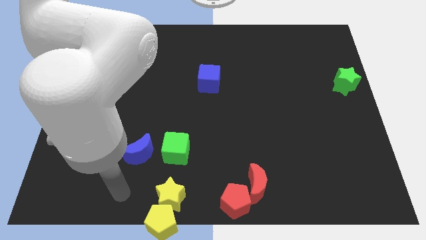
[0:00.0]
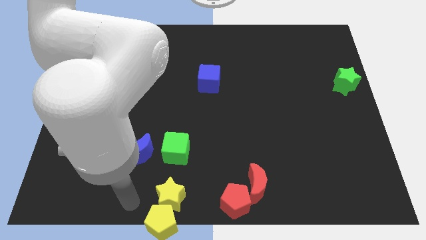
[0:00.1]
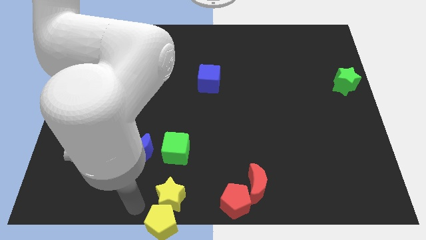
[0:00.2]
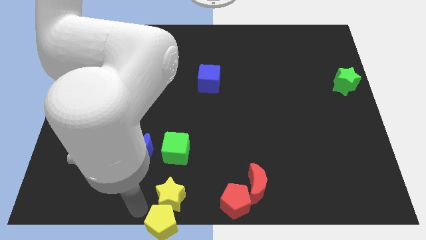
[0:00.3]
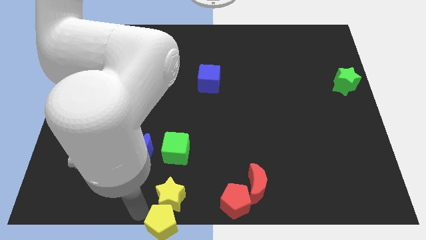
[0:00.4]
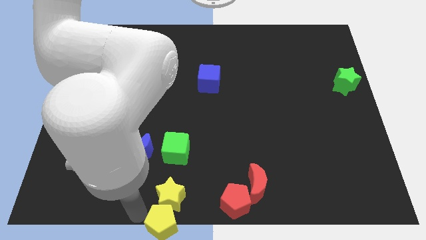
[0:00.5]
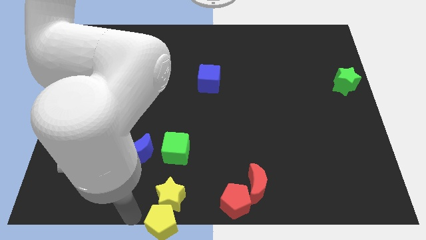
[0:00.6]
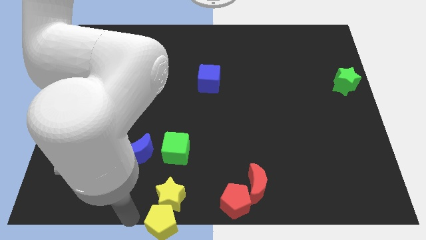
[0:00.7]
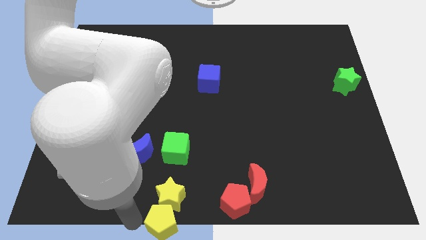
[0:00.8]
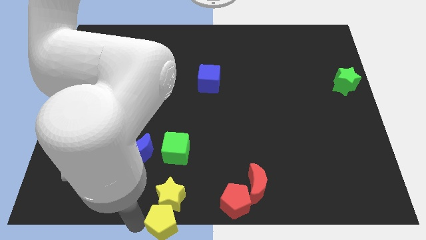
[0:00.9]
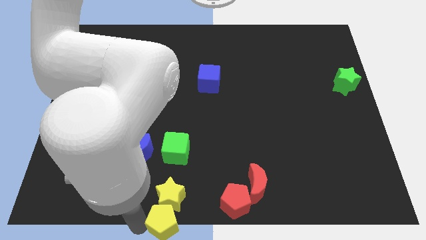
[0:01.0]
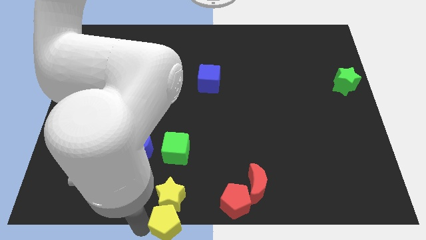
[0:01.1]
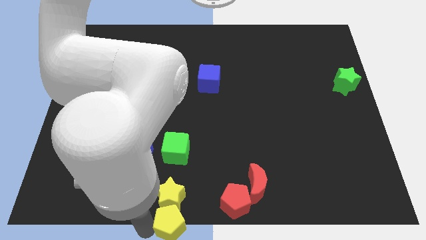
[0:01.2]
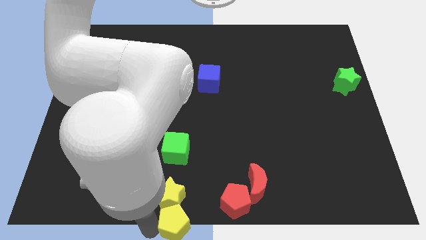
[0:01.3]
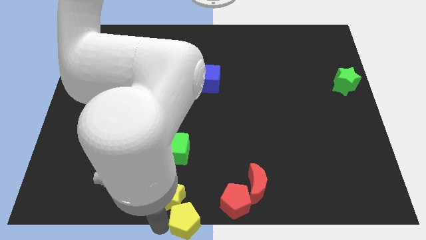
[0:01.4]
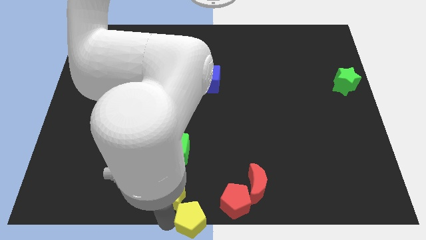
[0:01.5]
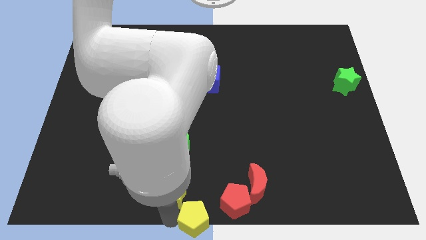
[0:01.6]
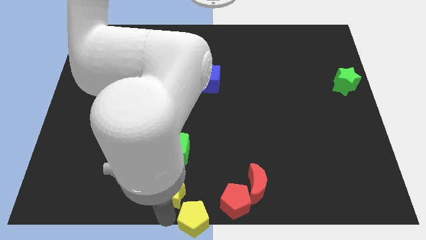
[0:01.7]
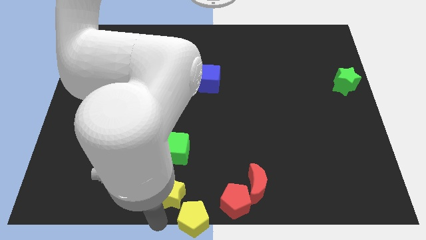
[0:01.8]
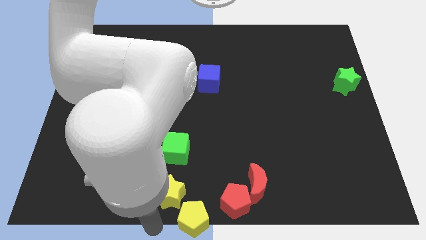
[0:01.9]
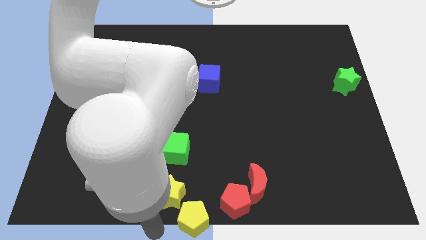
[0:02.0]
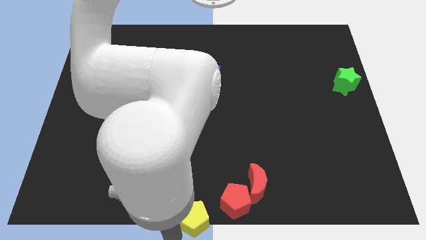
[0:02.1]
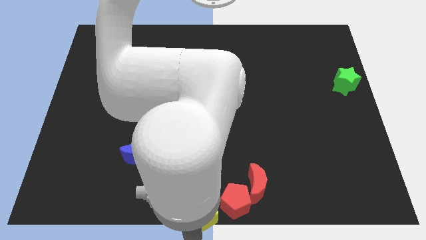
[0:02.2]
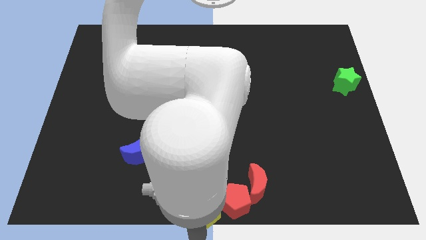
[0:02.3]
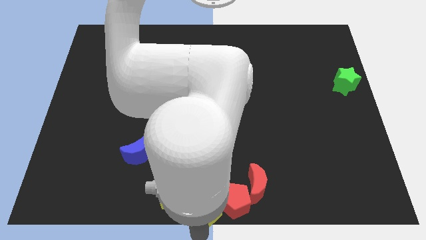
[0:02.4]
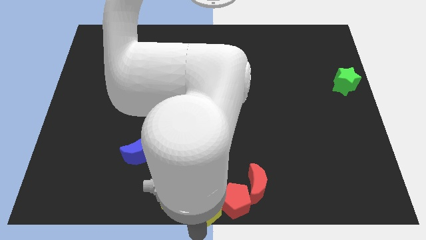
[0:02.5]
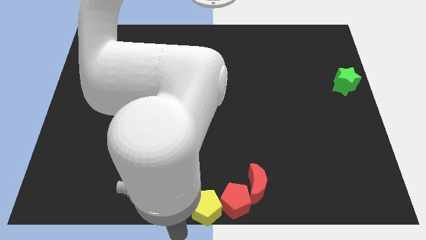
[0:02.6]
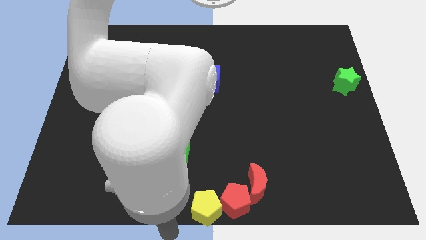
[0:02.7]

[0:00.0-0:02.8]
place the yellow pentagon left to the red pentagon

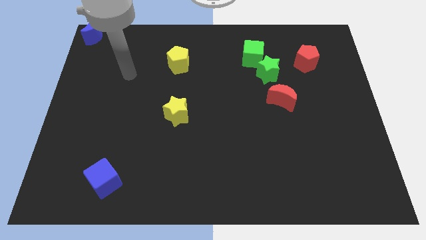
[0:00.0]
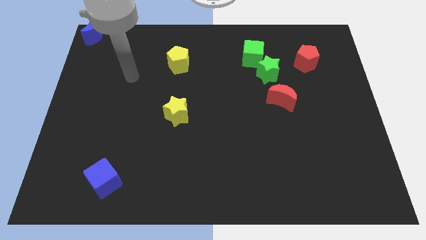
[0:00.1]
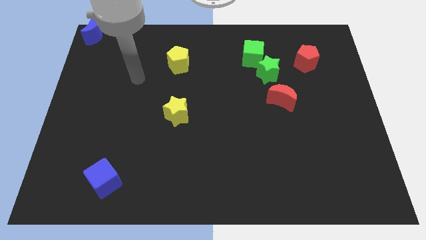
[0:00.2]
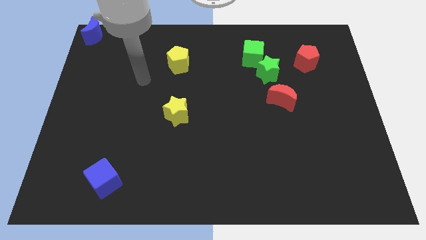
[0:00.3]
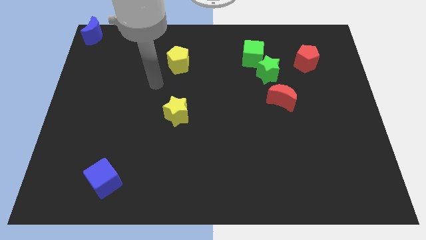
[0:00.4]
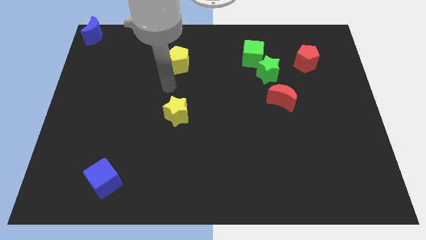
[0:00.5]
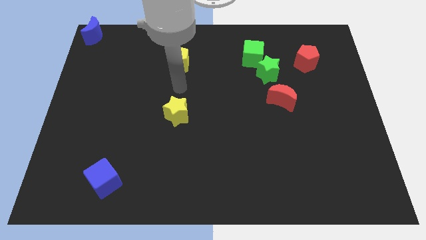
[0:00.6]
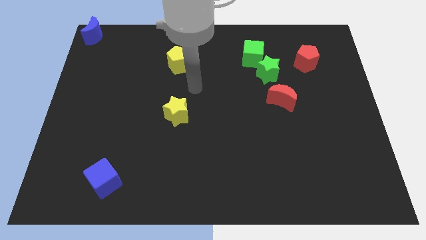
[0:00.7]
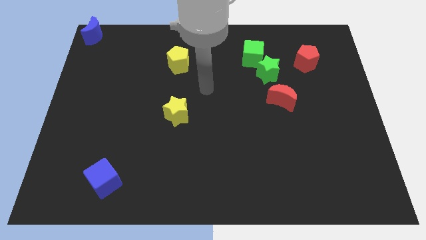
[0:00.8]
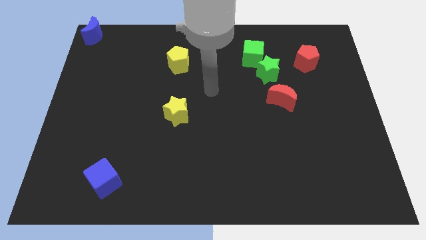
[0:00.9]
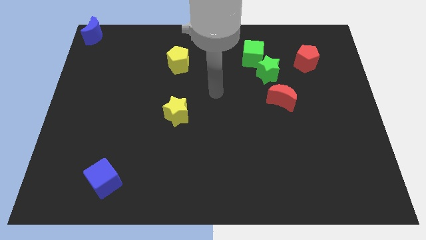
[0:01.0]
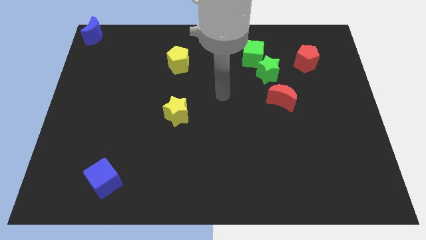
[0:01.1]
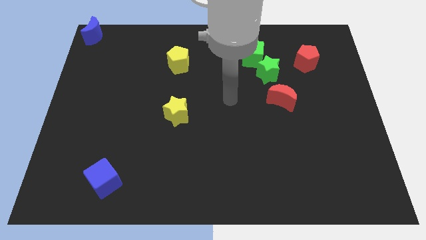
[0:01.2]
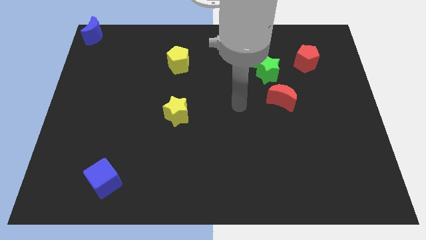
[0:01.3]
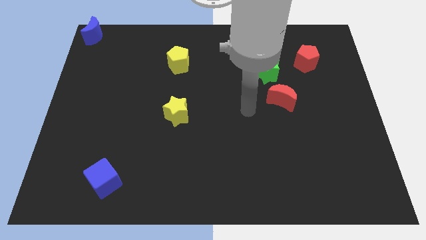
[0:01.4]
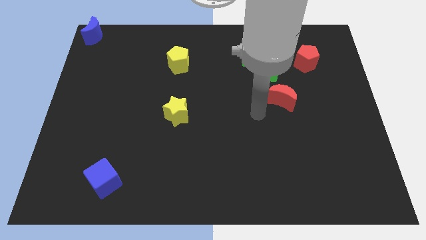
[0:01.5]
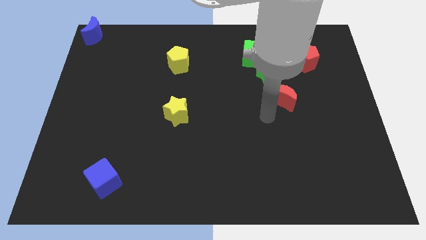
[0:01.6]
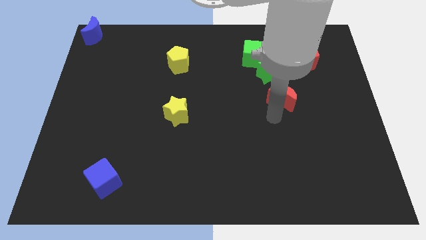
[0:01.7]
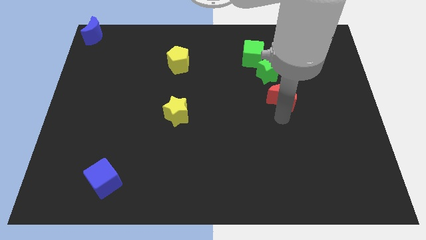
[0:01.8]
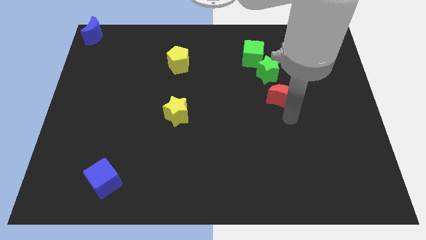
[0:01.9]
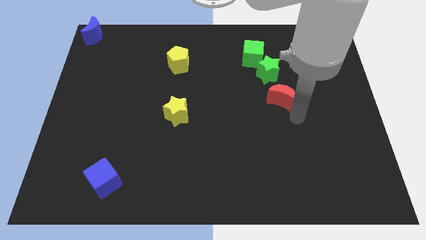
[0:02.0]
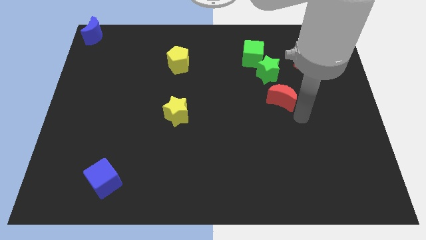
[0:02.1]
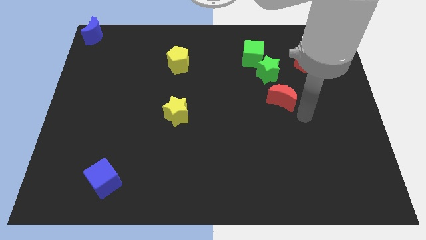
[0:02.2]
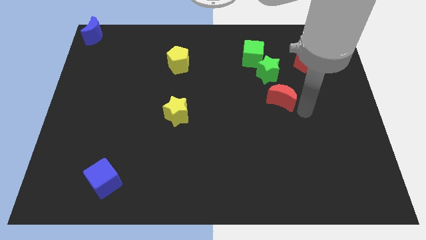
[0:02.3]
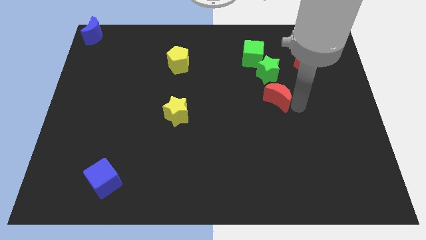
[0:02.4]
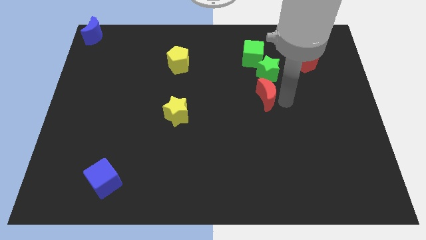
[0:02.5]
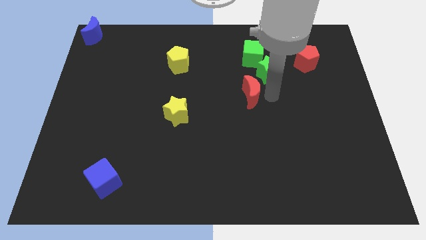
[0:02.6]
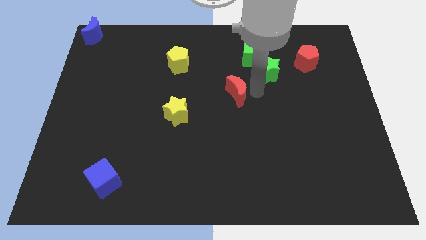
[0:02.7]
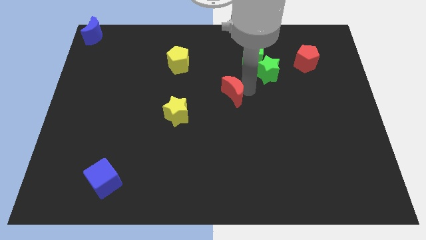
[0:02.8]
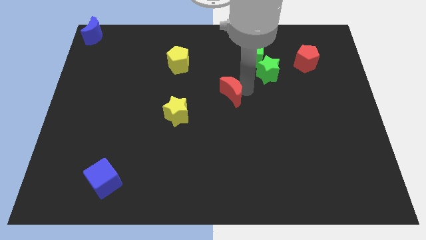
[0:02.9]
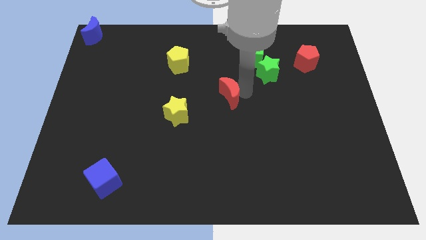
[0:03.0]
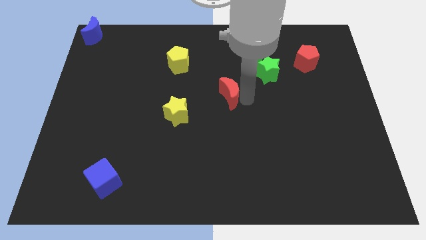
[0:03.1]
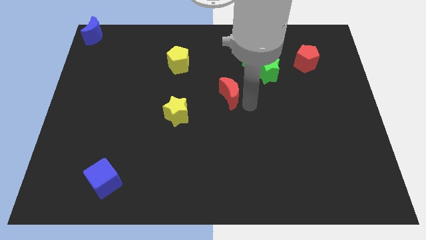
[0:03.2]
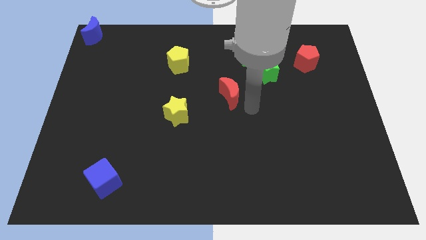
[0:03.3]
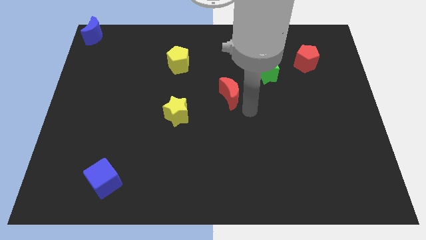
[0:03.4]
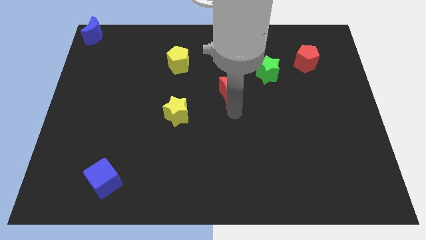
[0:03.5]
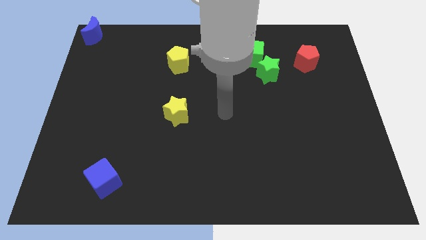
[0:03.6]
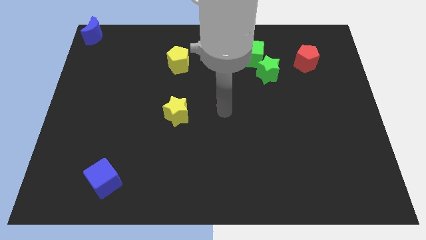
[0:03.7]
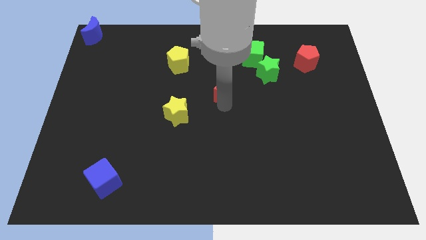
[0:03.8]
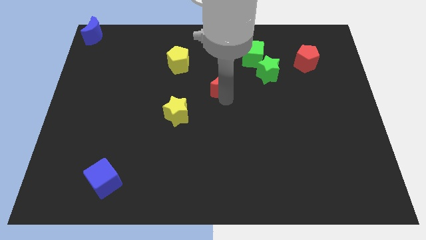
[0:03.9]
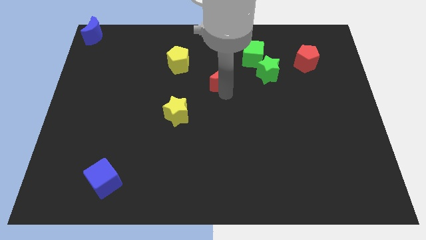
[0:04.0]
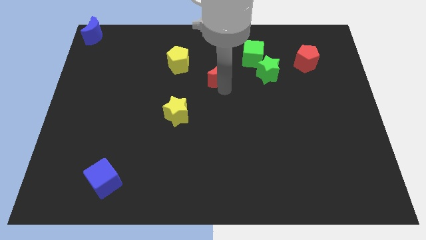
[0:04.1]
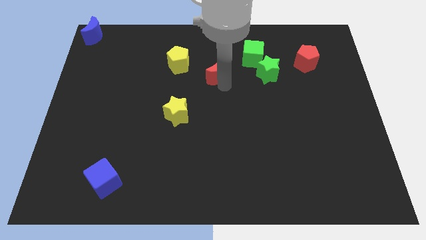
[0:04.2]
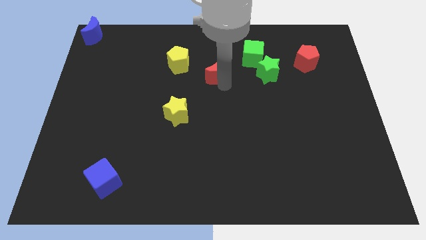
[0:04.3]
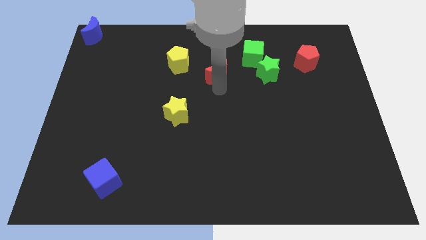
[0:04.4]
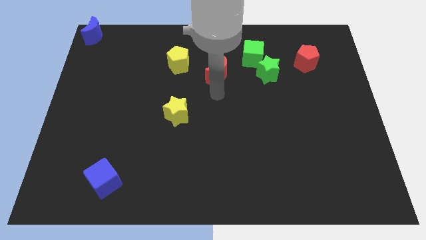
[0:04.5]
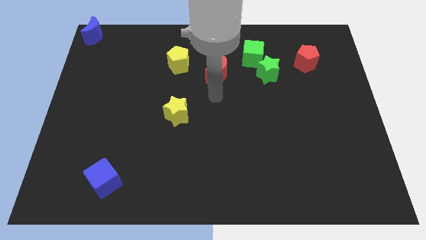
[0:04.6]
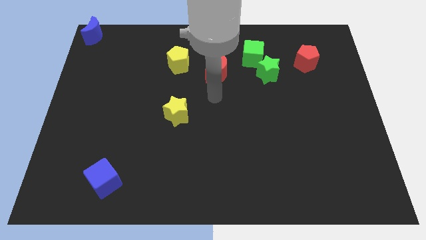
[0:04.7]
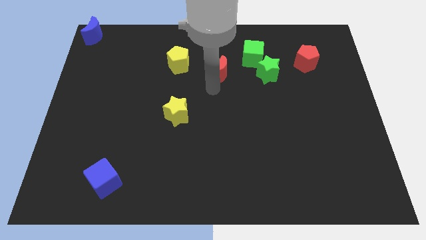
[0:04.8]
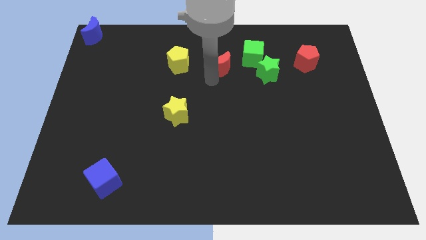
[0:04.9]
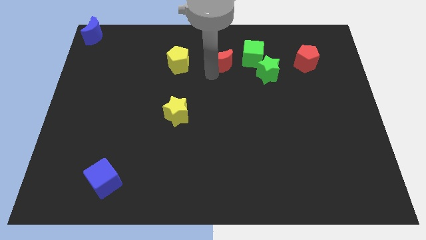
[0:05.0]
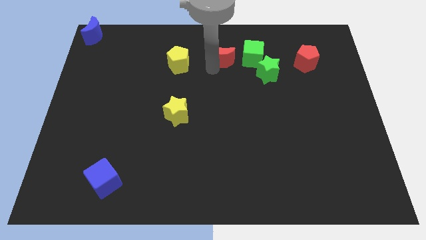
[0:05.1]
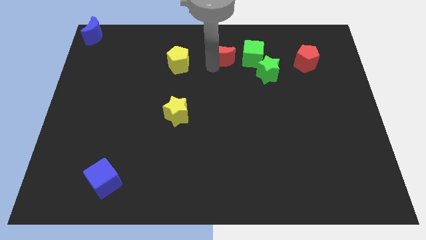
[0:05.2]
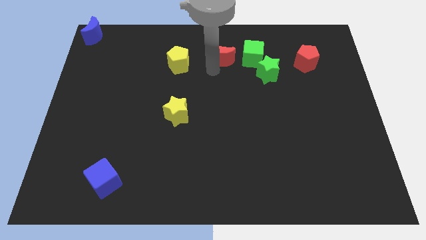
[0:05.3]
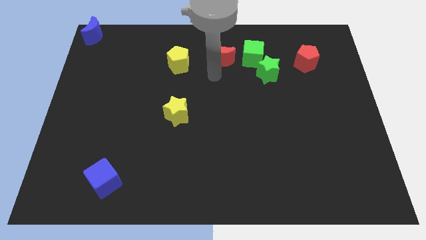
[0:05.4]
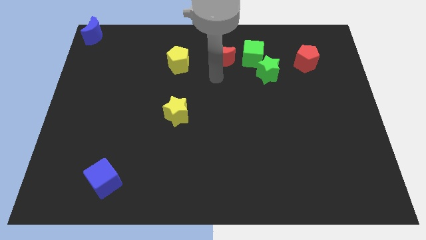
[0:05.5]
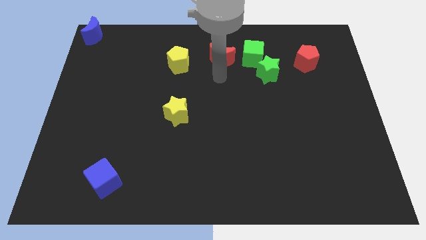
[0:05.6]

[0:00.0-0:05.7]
place the red crescent to the left of the green cube
